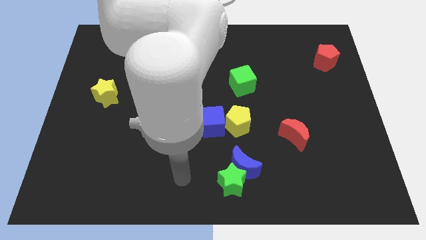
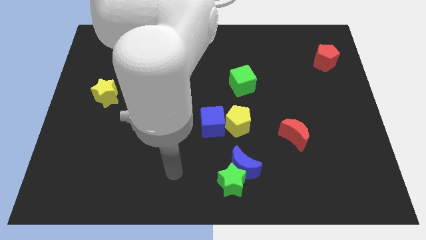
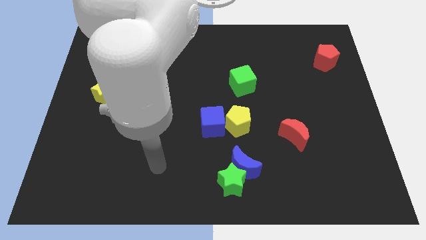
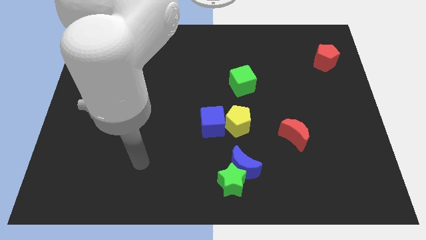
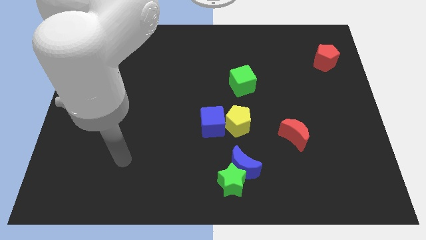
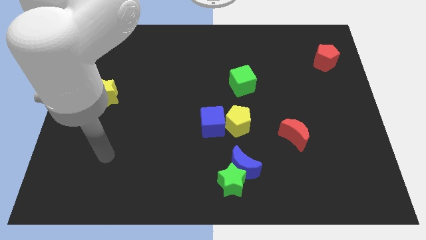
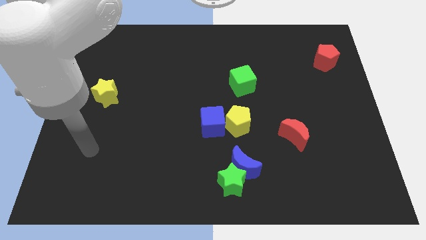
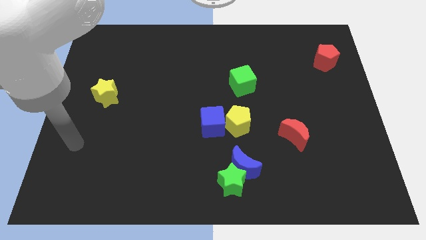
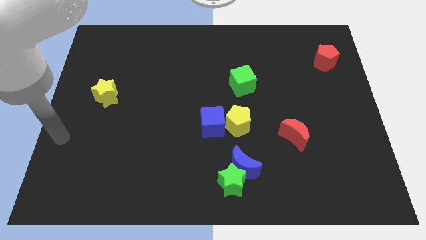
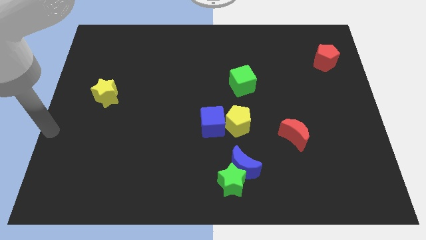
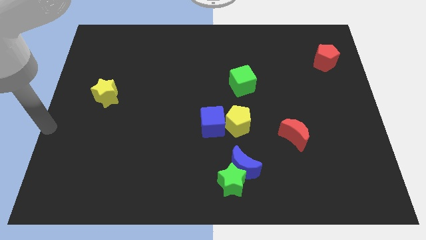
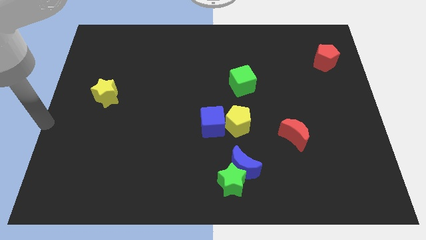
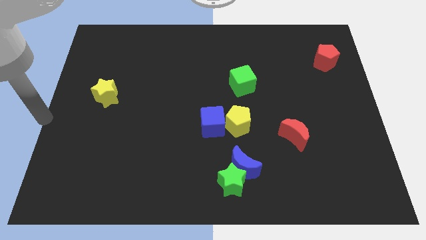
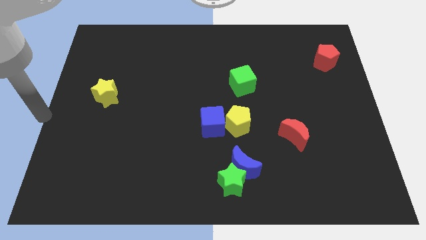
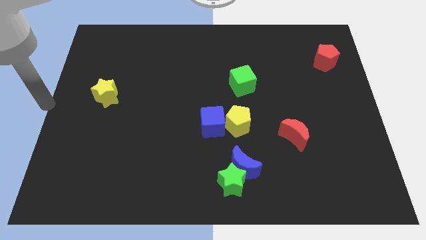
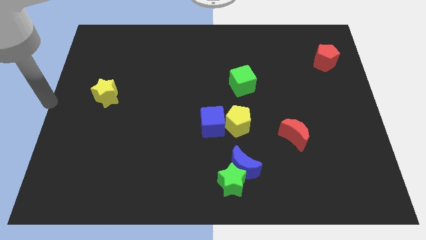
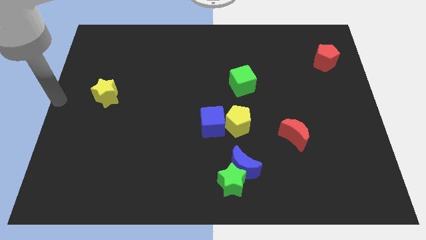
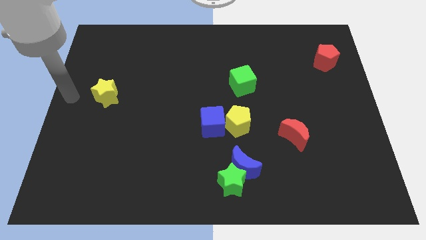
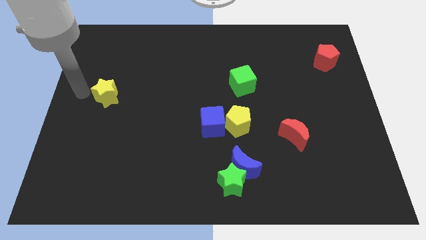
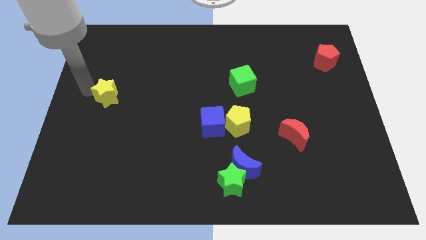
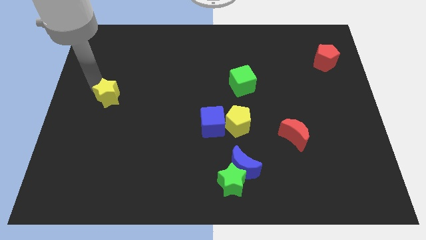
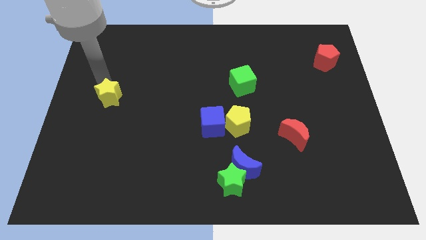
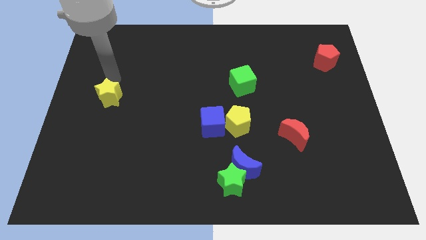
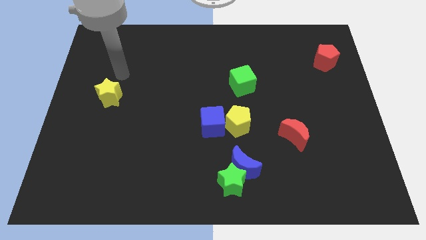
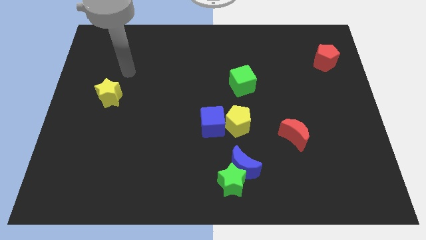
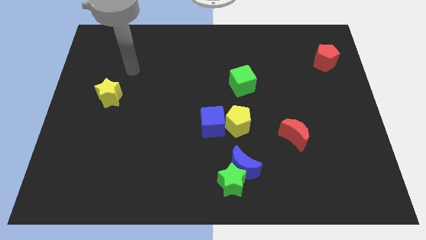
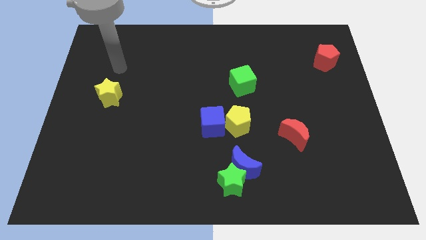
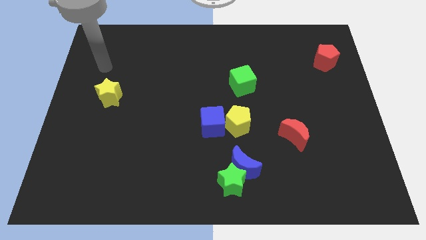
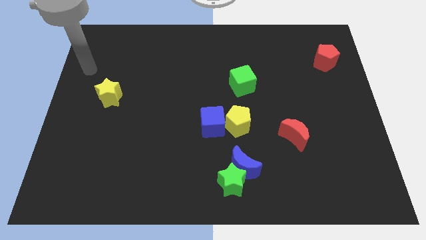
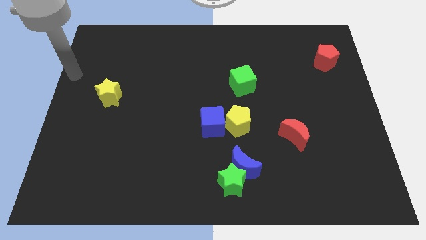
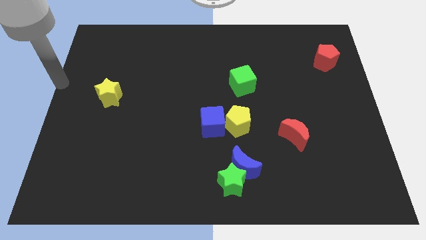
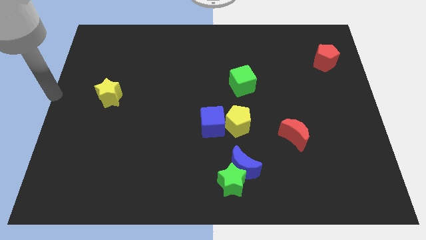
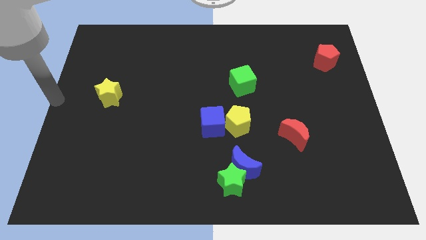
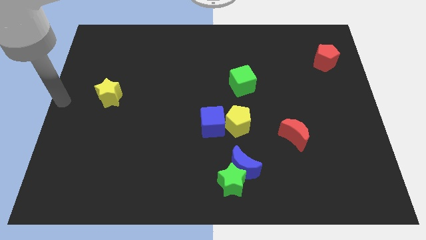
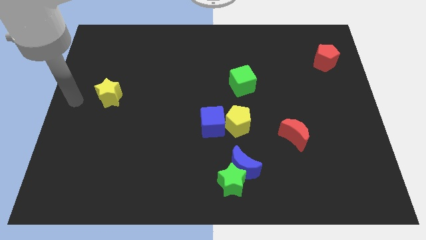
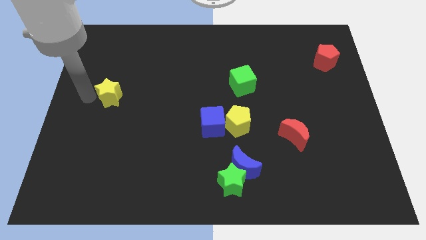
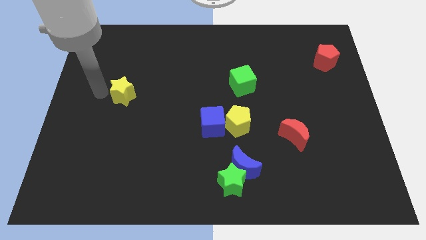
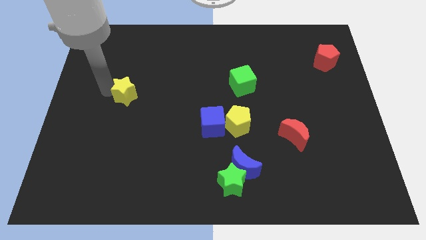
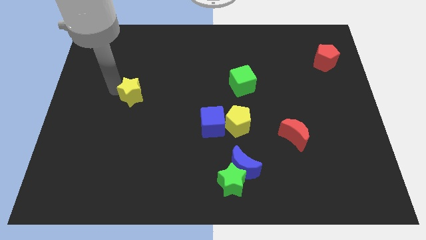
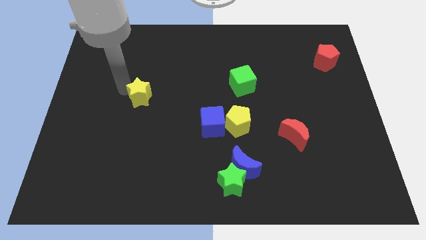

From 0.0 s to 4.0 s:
push the yellow star towards the center

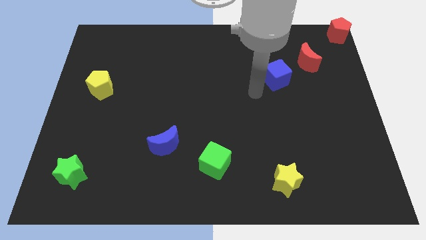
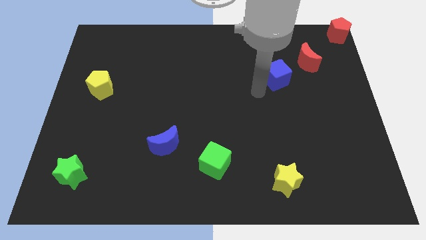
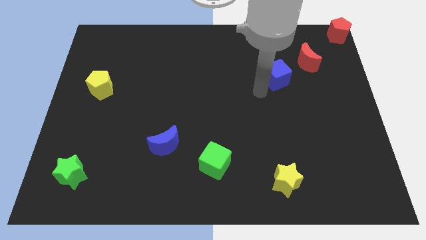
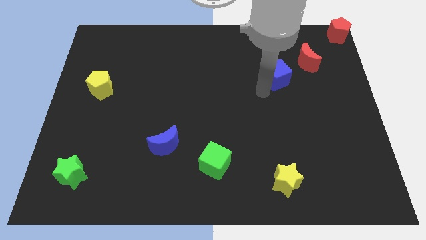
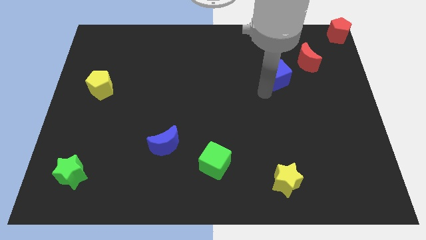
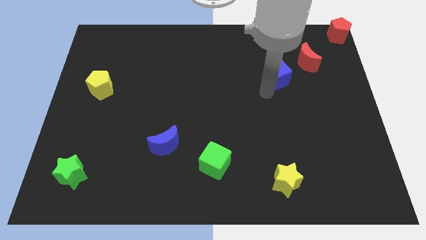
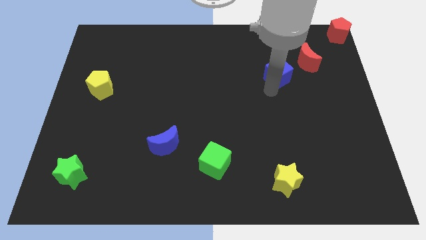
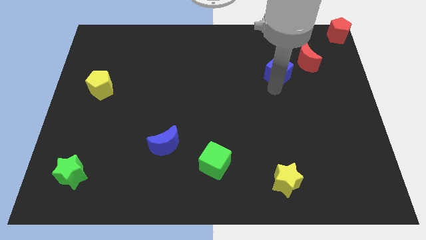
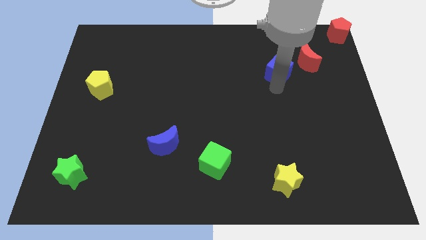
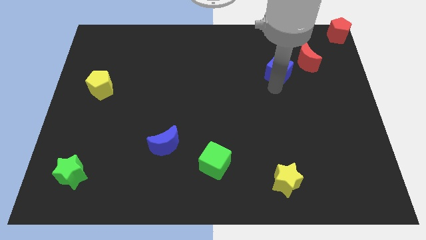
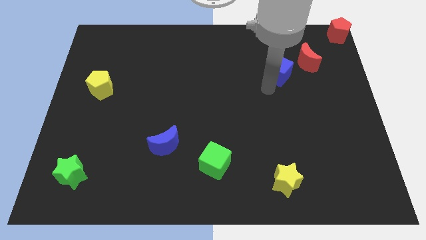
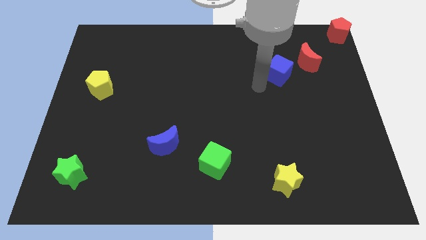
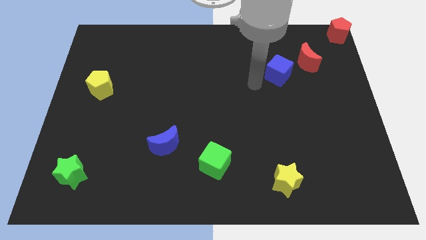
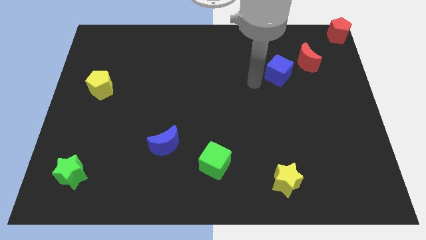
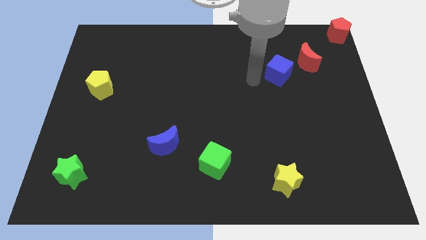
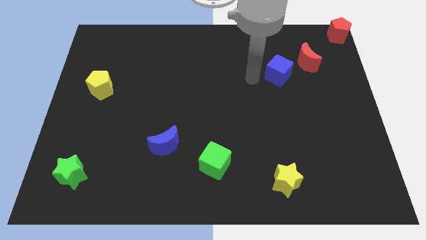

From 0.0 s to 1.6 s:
push the blue cube close to the red crescent

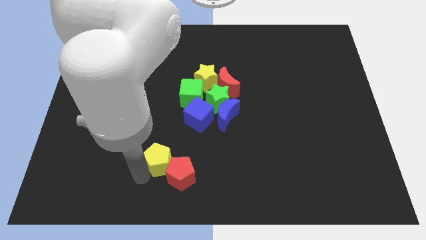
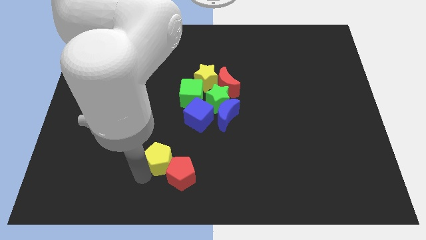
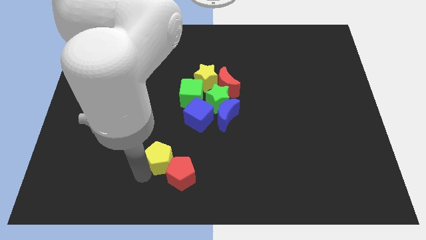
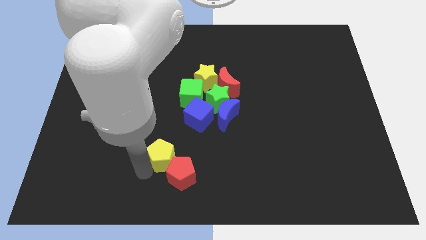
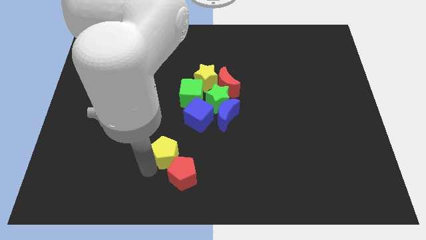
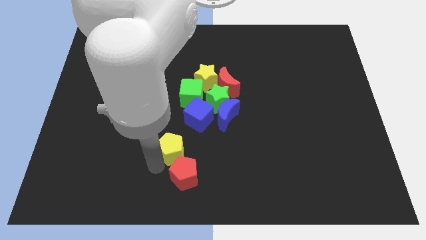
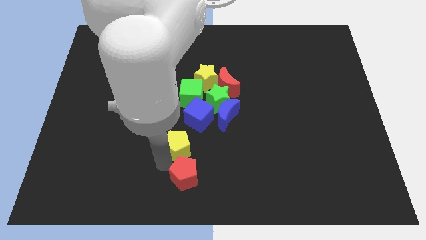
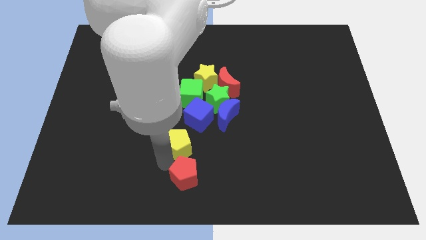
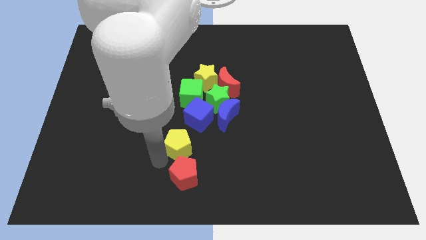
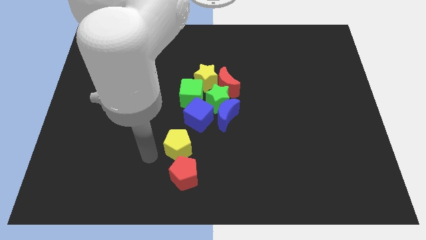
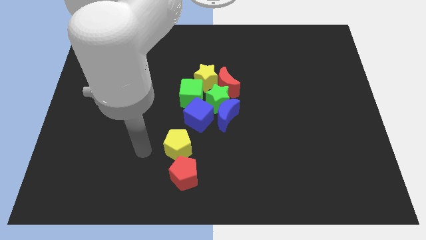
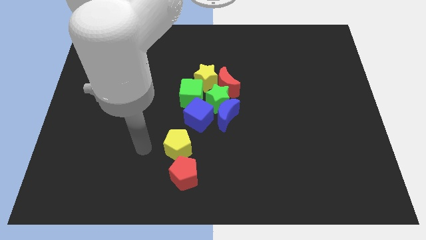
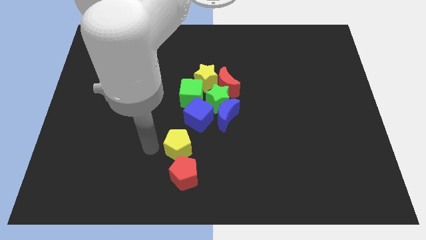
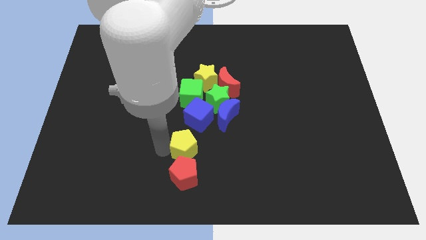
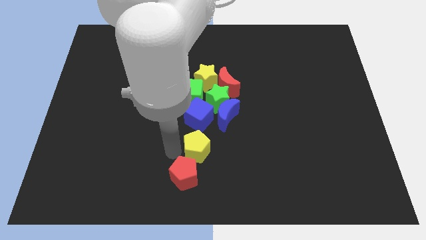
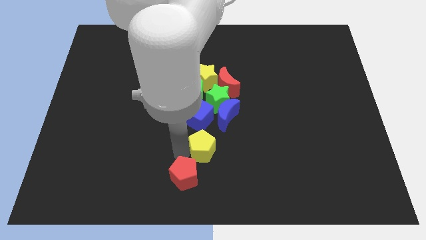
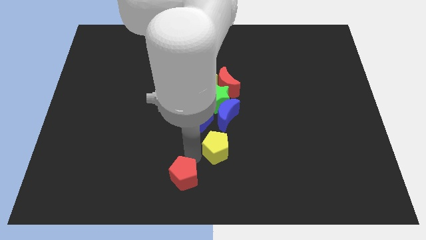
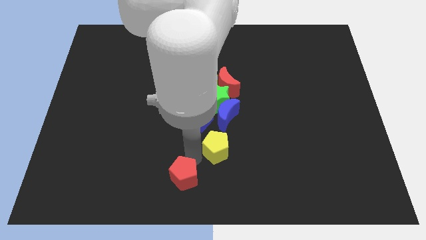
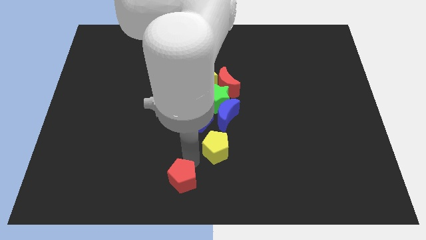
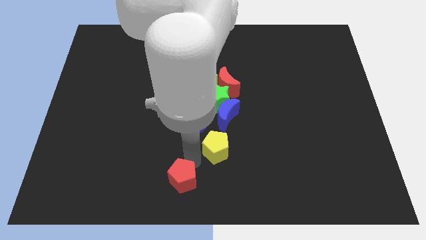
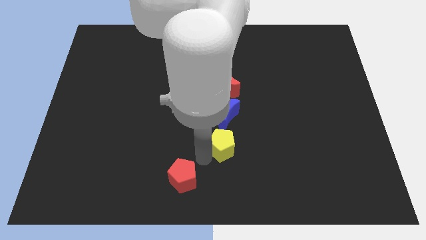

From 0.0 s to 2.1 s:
place the yellow pentagon below the blue moon

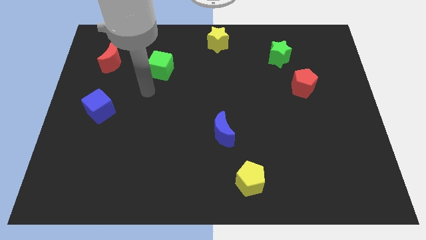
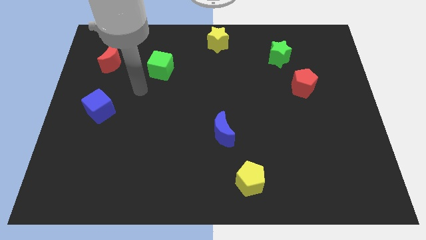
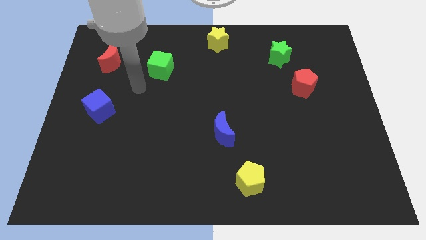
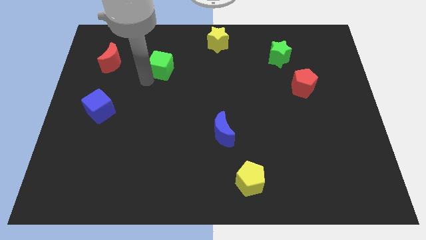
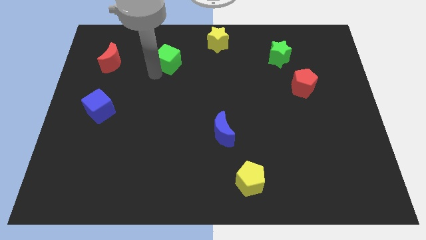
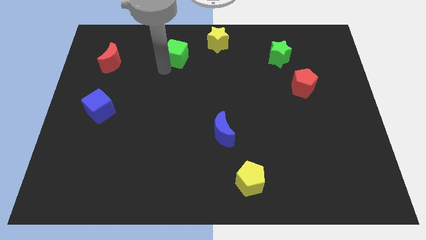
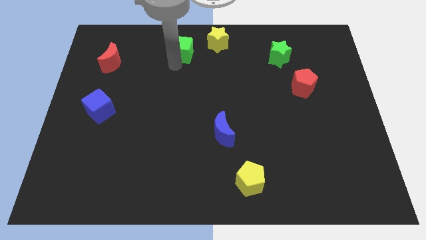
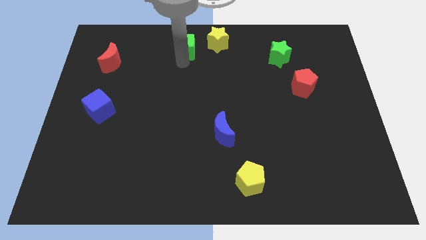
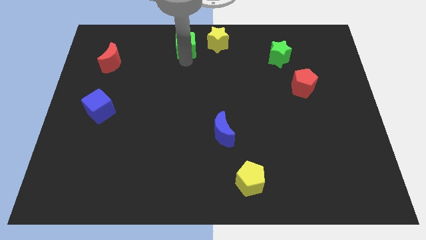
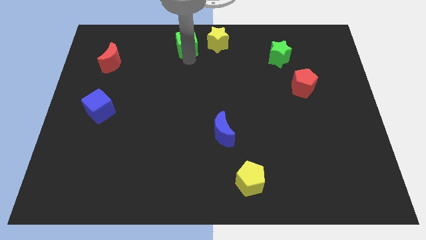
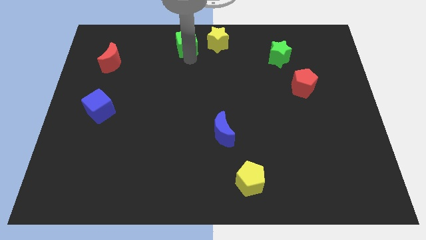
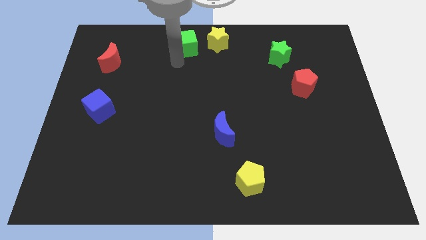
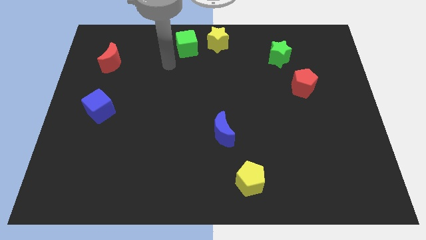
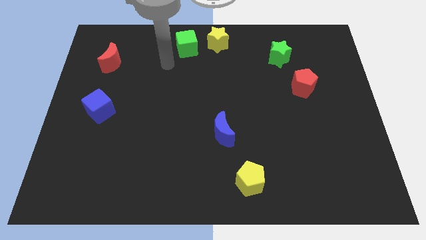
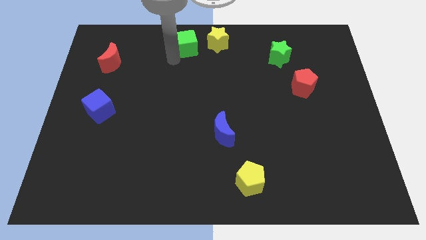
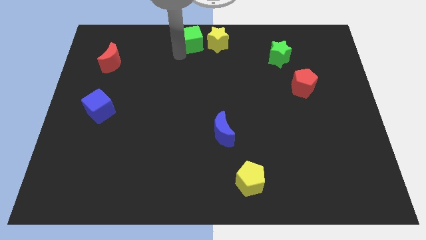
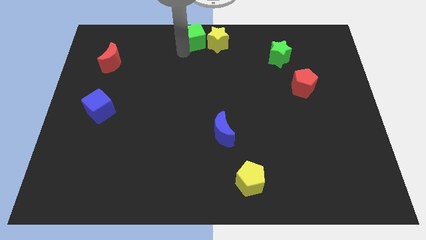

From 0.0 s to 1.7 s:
push the green cube to the left side of the yellow star
